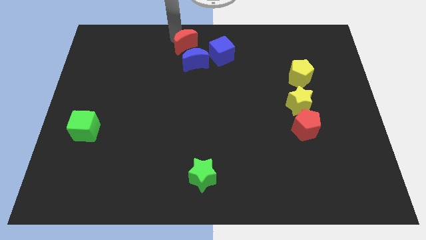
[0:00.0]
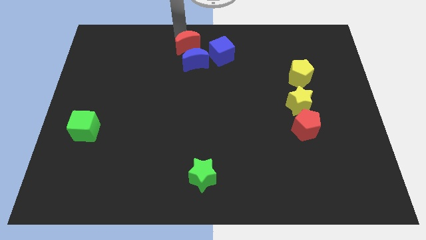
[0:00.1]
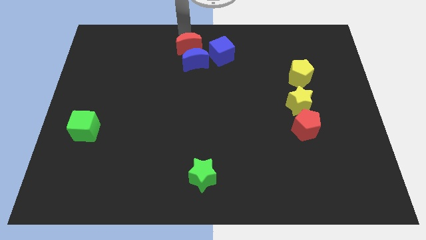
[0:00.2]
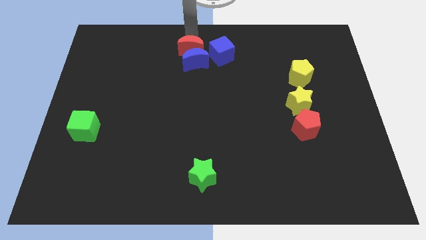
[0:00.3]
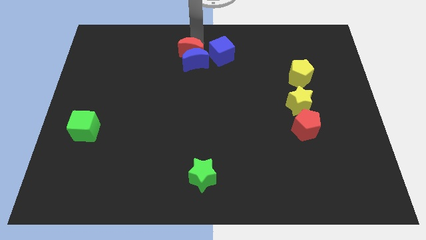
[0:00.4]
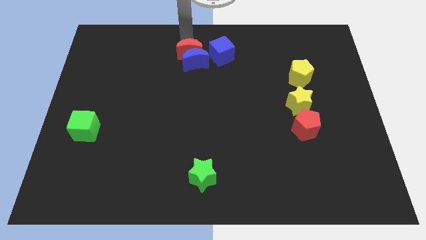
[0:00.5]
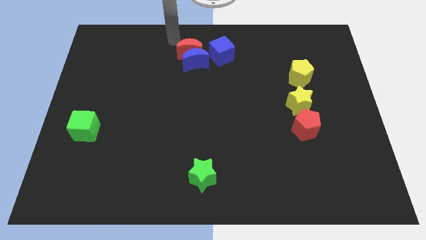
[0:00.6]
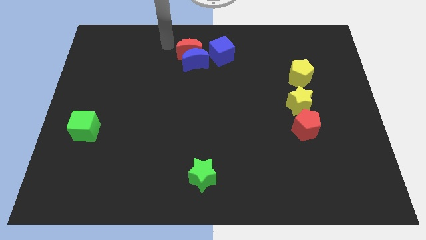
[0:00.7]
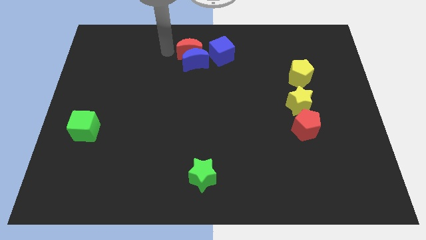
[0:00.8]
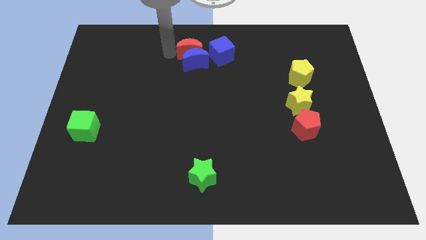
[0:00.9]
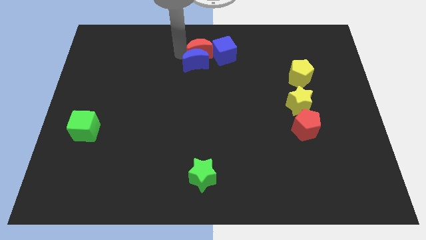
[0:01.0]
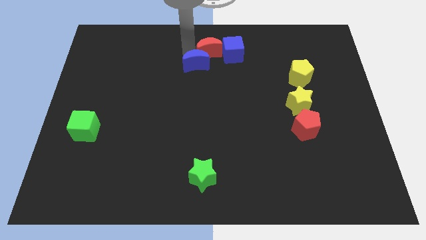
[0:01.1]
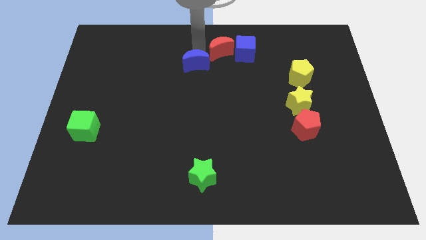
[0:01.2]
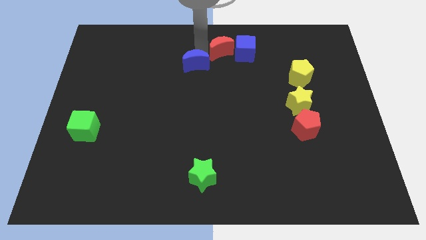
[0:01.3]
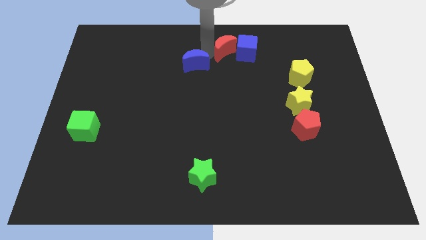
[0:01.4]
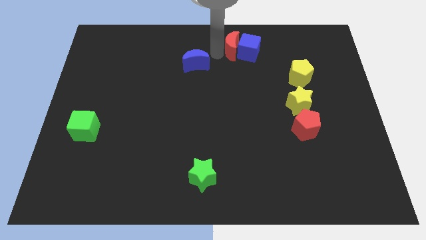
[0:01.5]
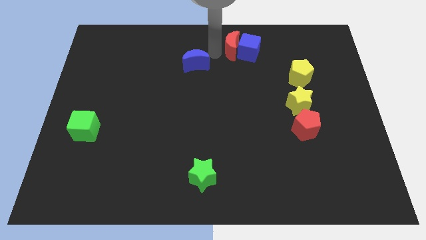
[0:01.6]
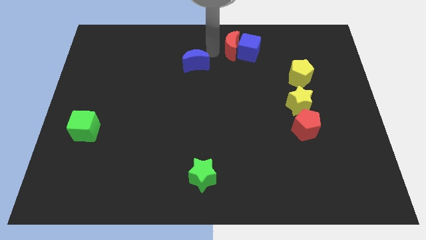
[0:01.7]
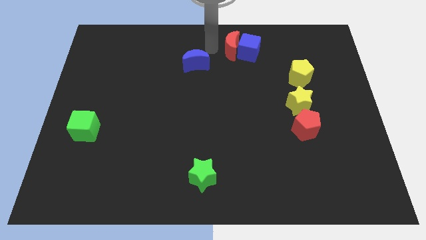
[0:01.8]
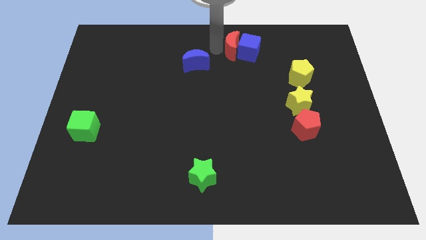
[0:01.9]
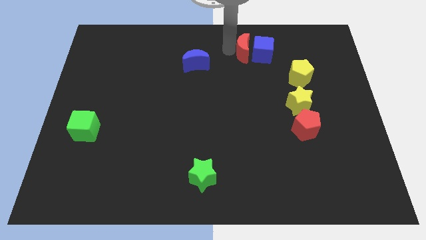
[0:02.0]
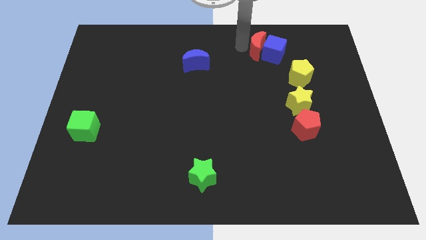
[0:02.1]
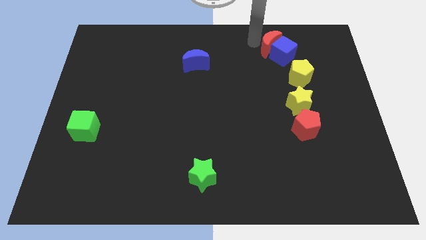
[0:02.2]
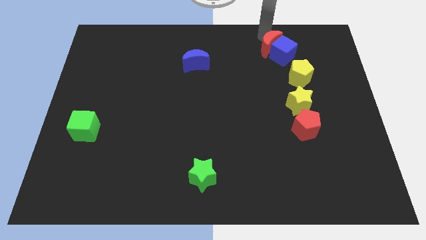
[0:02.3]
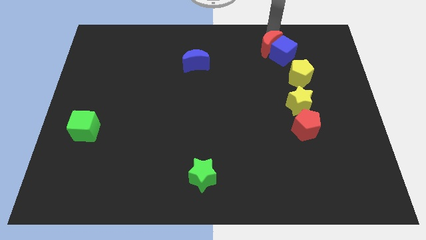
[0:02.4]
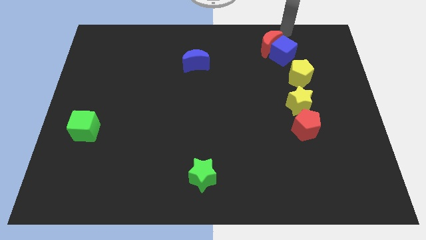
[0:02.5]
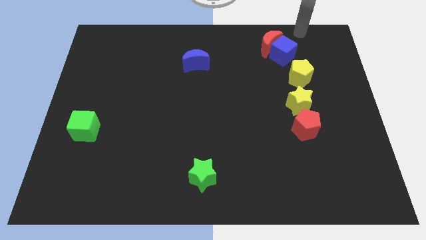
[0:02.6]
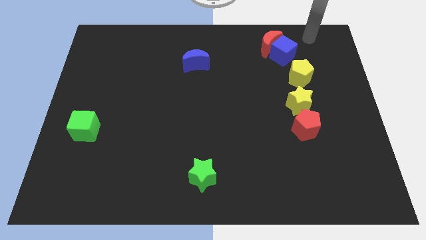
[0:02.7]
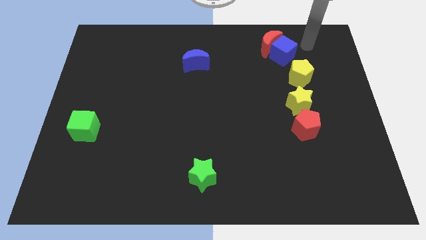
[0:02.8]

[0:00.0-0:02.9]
move red moon and blue cube to right side of board

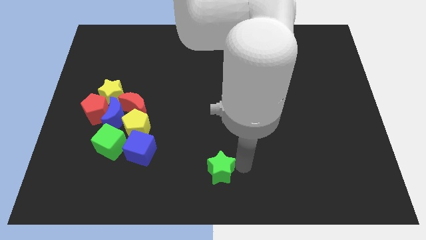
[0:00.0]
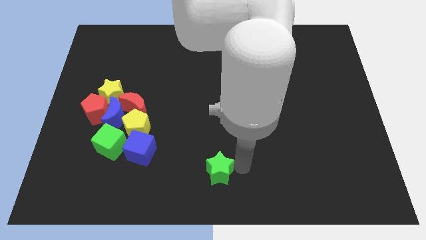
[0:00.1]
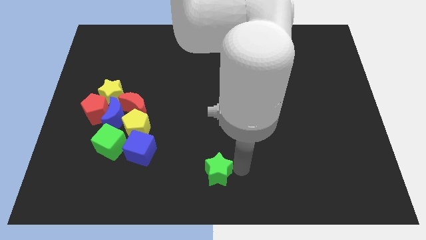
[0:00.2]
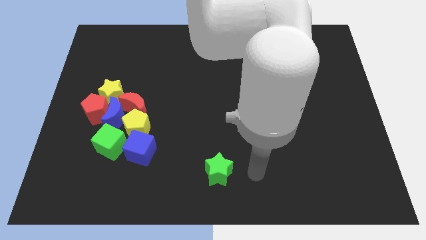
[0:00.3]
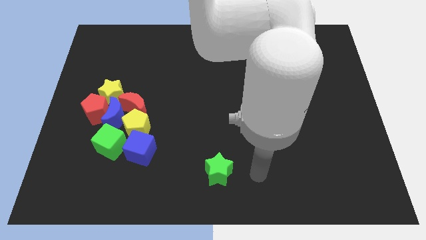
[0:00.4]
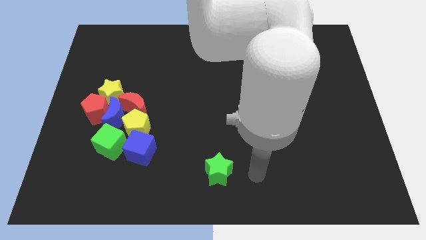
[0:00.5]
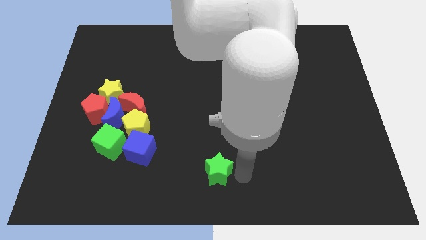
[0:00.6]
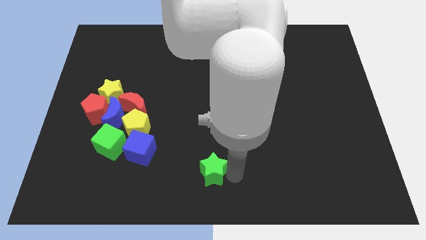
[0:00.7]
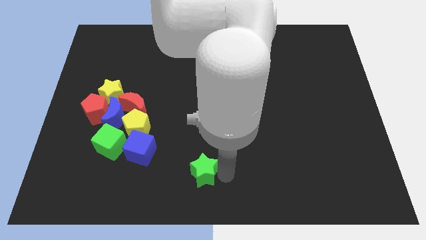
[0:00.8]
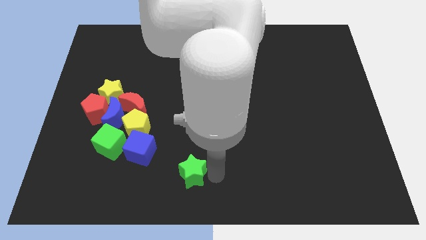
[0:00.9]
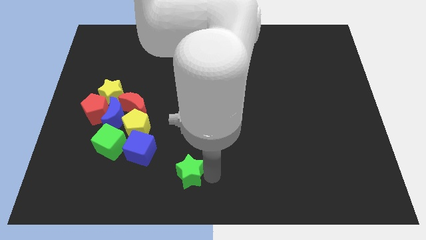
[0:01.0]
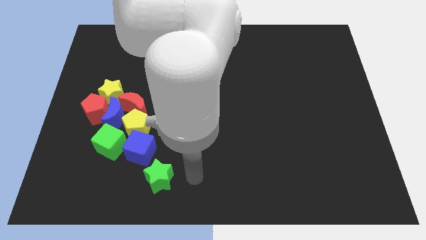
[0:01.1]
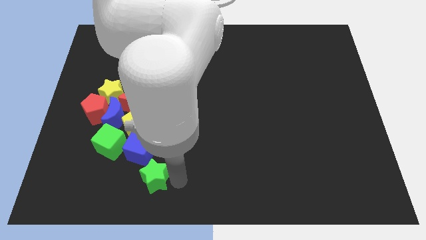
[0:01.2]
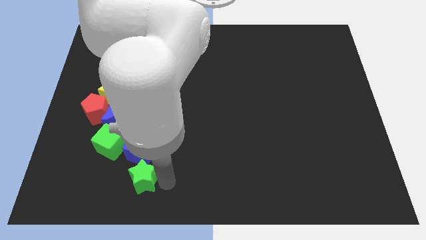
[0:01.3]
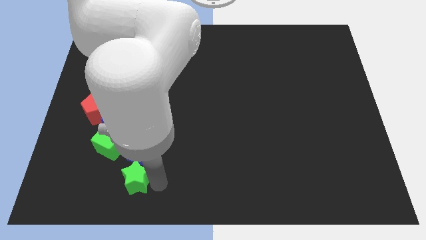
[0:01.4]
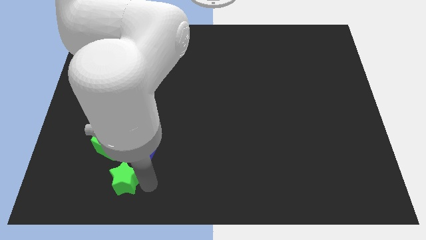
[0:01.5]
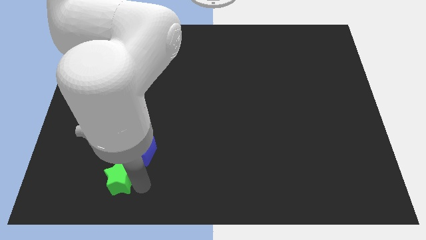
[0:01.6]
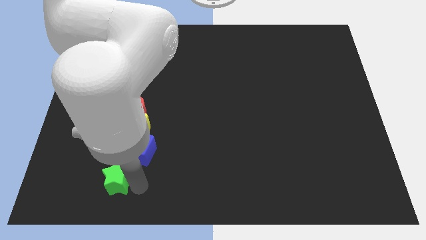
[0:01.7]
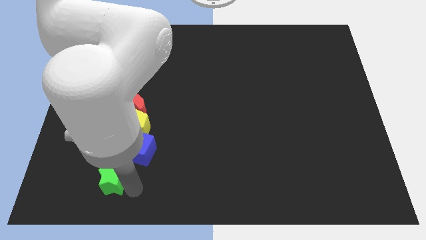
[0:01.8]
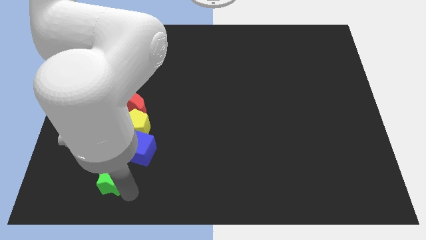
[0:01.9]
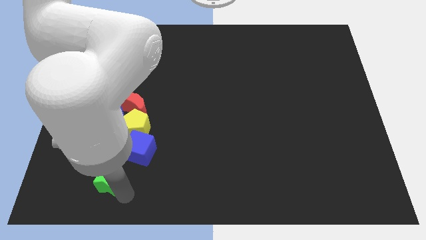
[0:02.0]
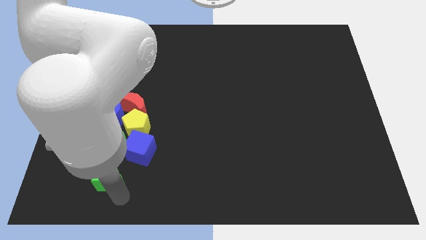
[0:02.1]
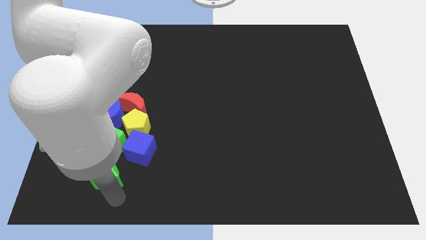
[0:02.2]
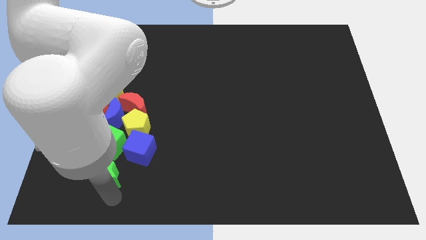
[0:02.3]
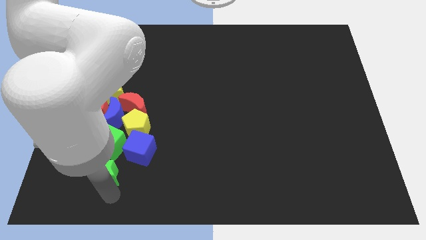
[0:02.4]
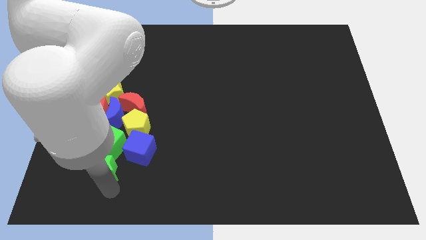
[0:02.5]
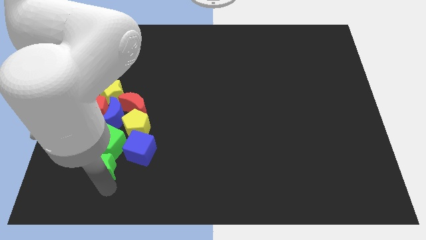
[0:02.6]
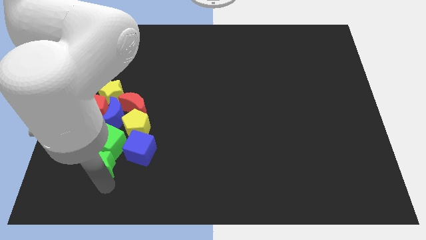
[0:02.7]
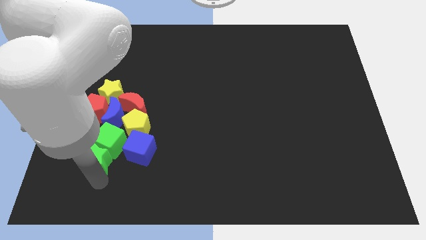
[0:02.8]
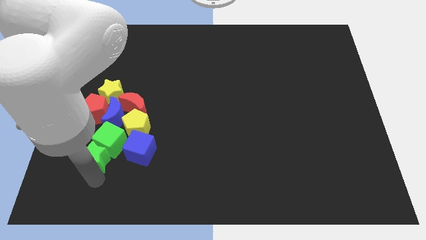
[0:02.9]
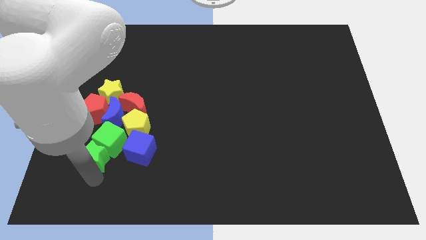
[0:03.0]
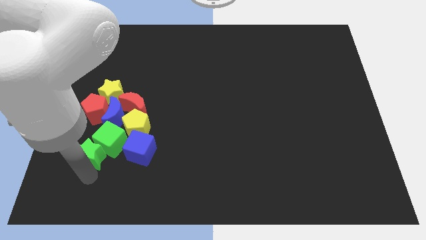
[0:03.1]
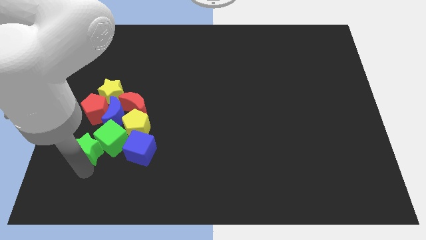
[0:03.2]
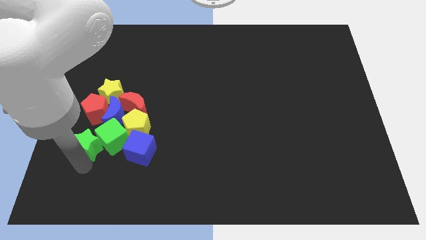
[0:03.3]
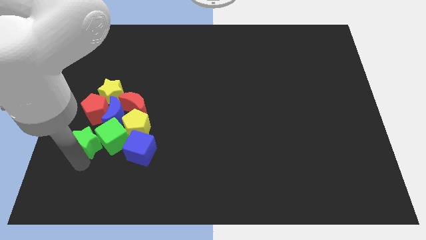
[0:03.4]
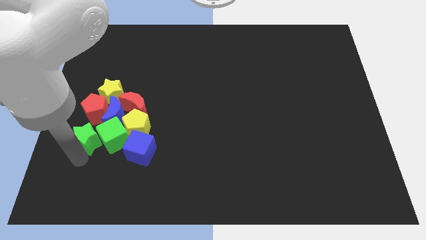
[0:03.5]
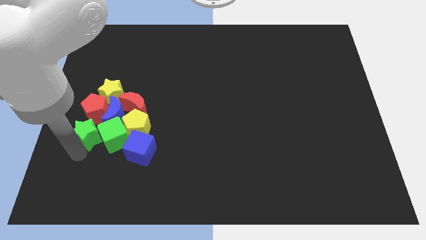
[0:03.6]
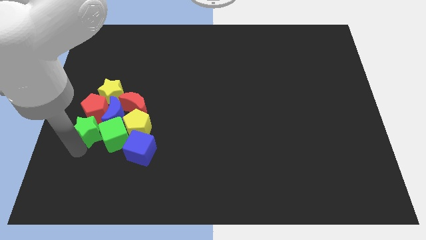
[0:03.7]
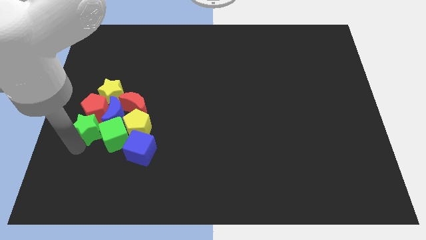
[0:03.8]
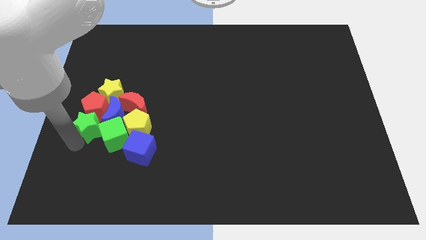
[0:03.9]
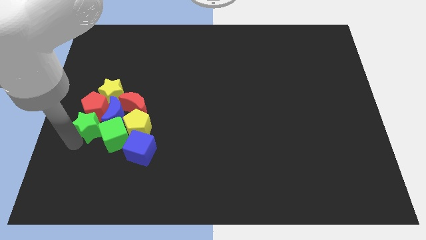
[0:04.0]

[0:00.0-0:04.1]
slide the green star into the group of blocks

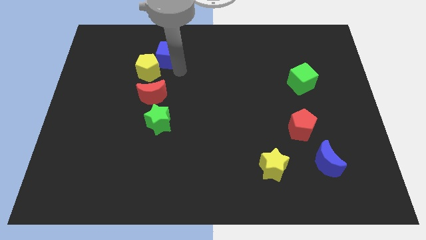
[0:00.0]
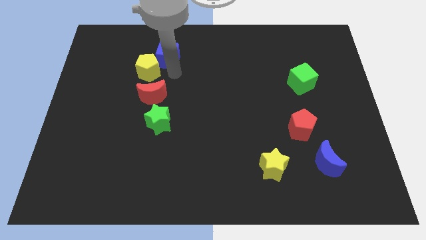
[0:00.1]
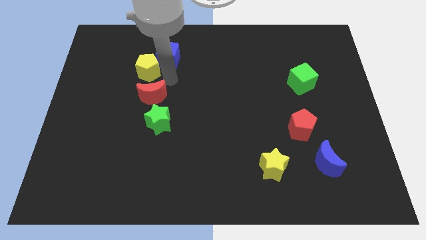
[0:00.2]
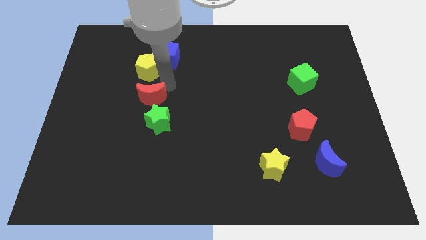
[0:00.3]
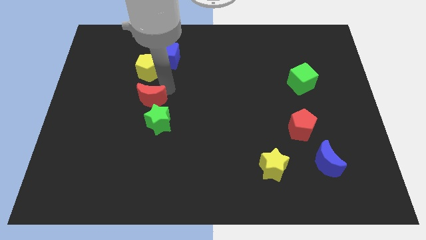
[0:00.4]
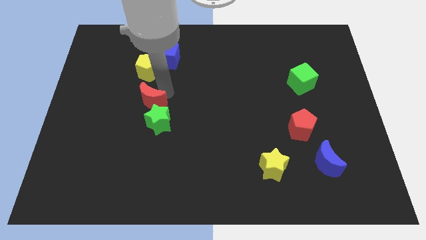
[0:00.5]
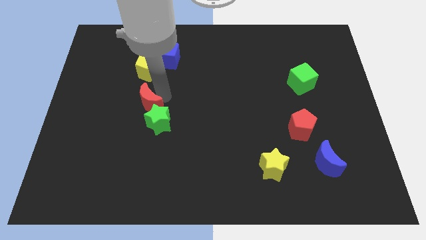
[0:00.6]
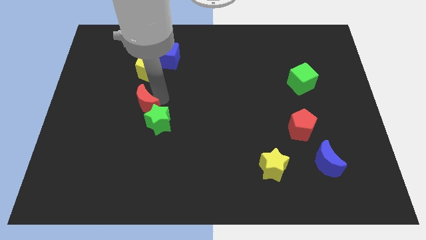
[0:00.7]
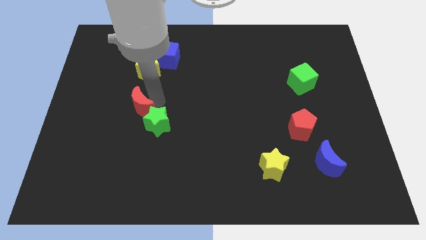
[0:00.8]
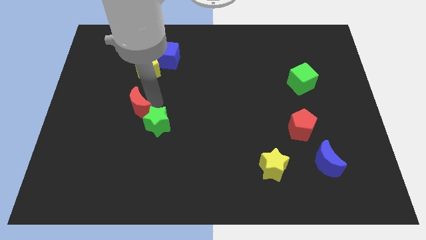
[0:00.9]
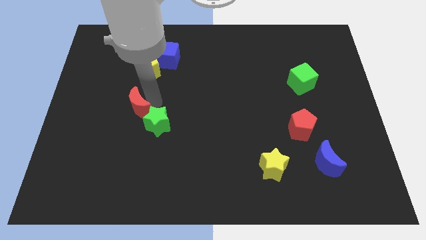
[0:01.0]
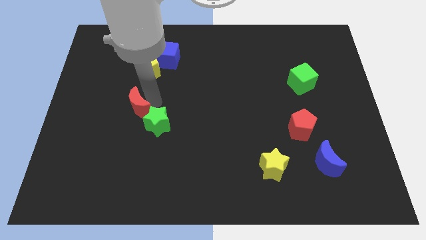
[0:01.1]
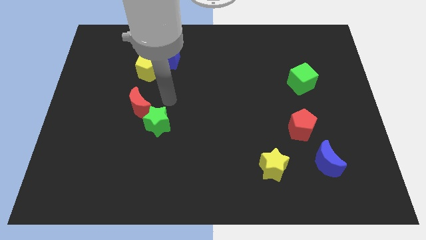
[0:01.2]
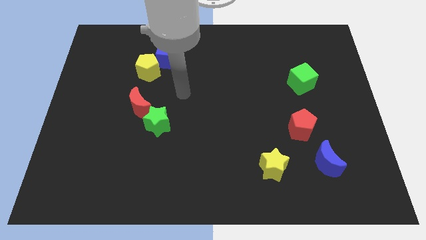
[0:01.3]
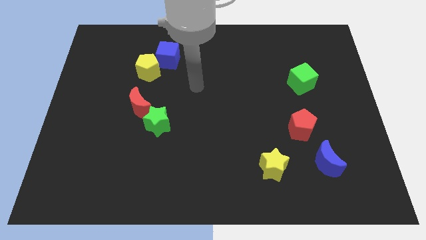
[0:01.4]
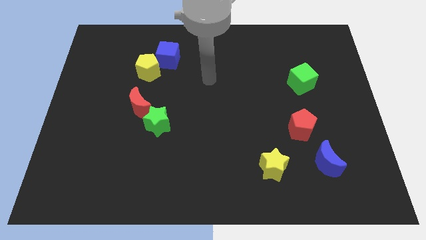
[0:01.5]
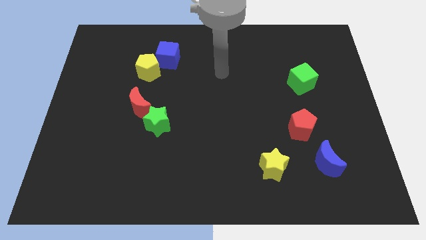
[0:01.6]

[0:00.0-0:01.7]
put the red moon into the green star

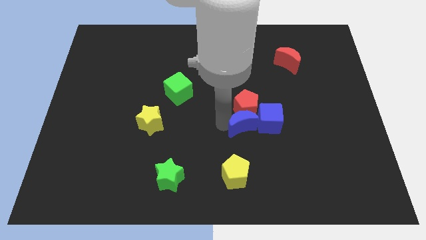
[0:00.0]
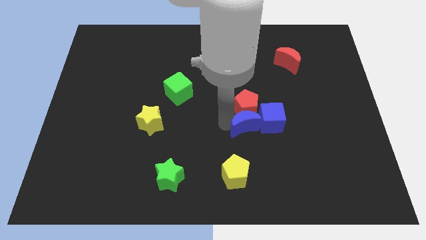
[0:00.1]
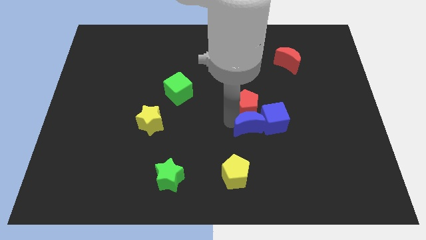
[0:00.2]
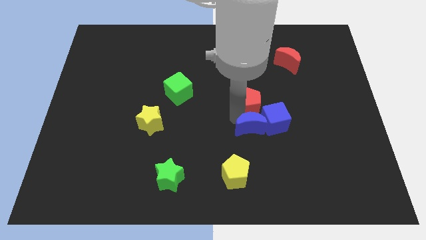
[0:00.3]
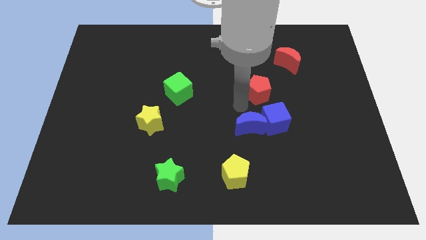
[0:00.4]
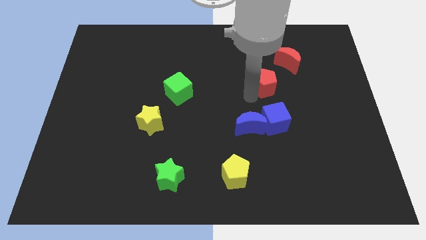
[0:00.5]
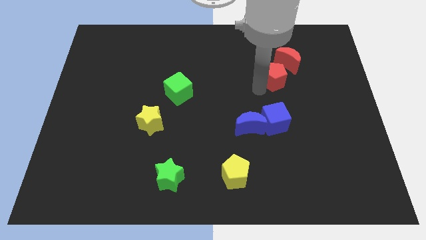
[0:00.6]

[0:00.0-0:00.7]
push red pentagon above blue cube
